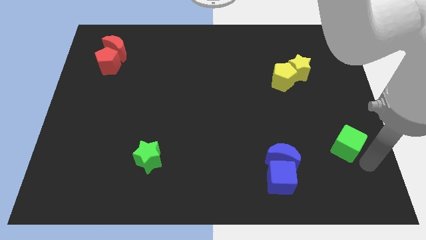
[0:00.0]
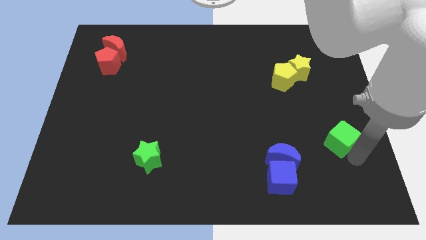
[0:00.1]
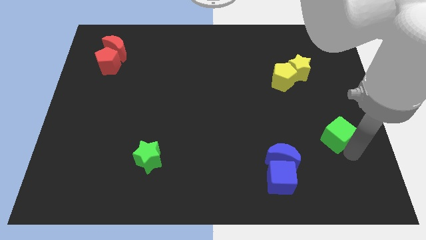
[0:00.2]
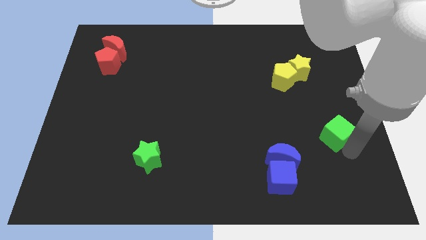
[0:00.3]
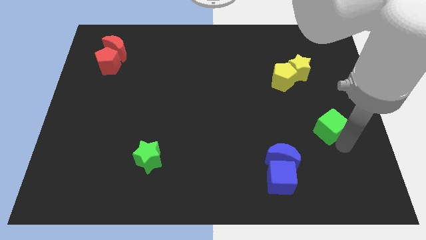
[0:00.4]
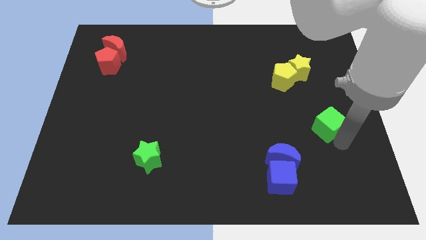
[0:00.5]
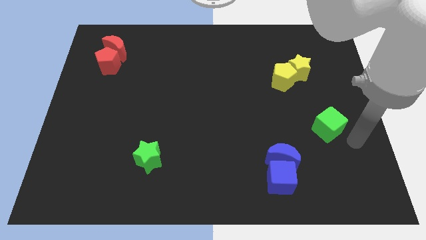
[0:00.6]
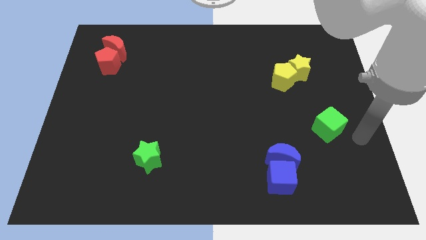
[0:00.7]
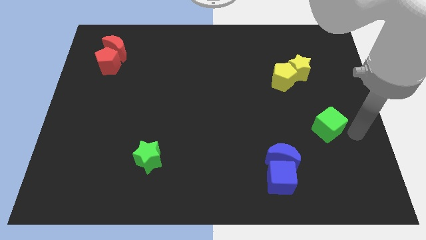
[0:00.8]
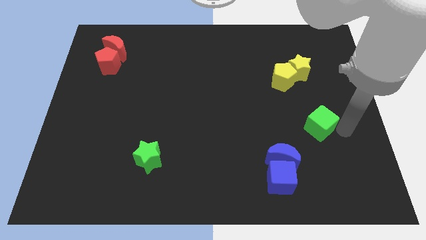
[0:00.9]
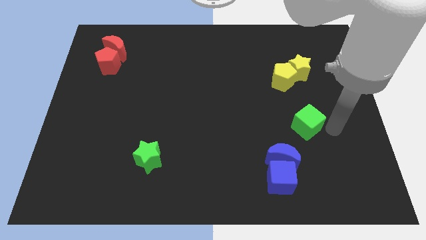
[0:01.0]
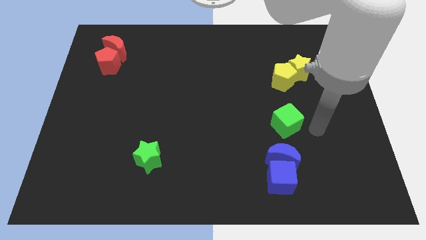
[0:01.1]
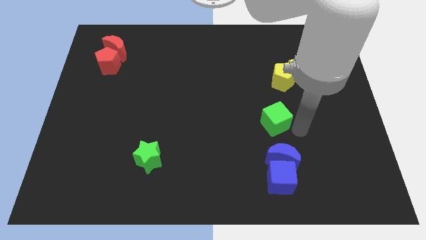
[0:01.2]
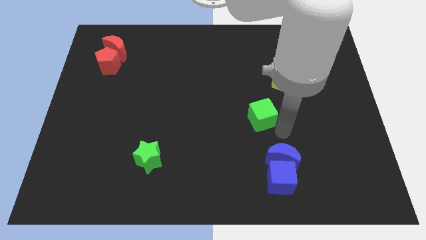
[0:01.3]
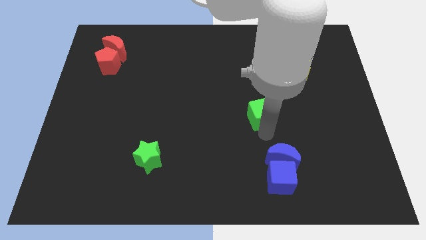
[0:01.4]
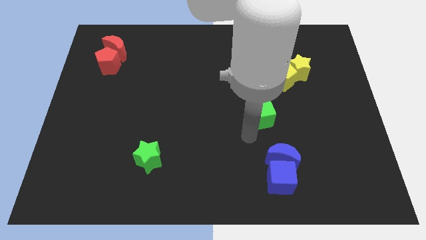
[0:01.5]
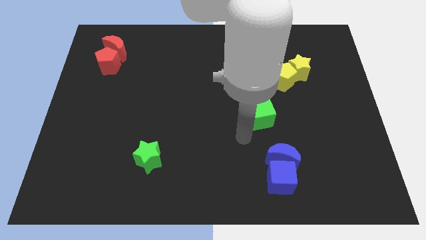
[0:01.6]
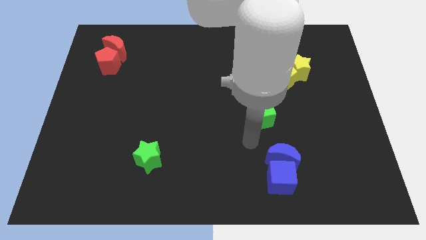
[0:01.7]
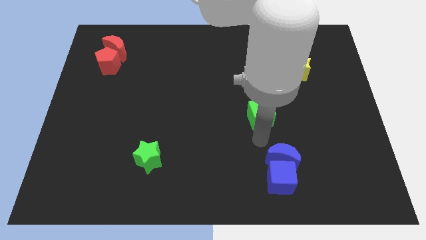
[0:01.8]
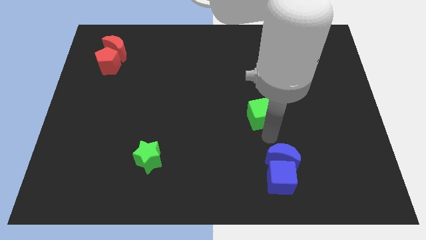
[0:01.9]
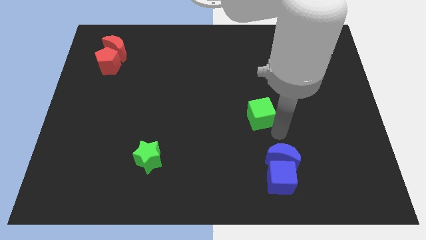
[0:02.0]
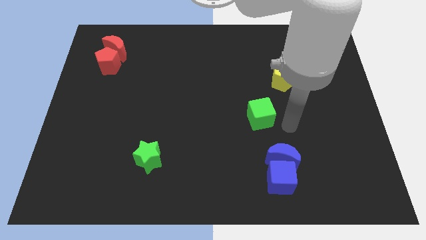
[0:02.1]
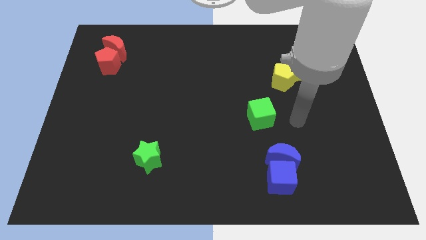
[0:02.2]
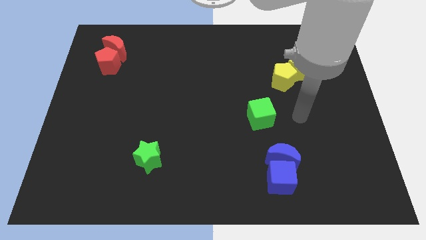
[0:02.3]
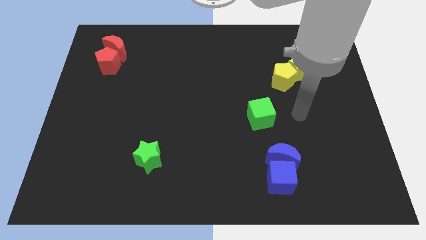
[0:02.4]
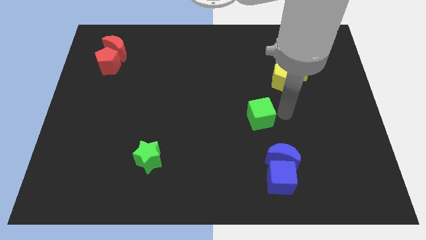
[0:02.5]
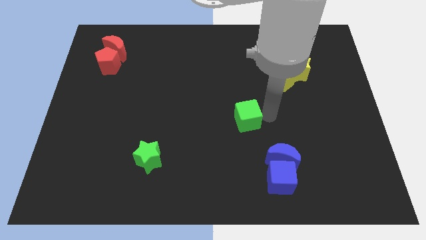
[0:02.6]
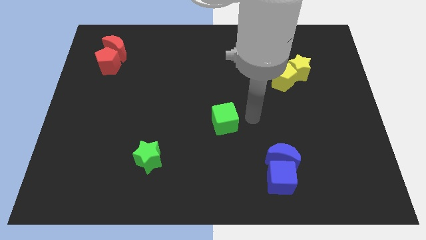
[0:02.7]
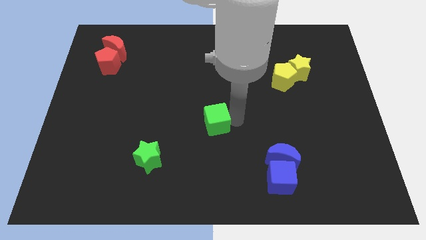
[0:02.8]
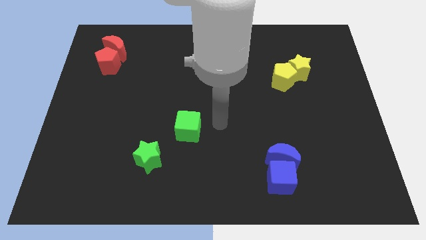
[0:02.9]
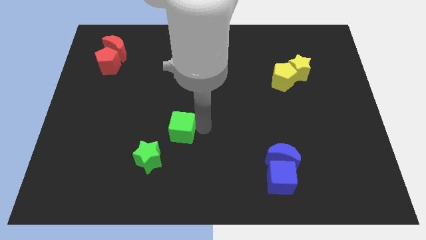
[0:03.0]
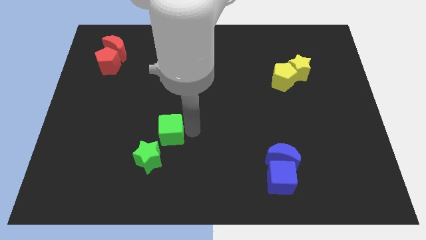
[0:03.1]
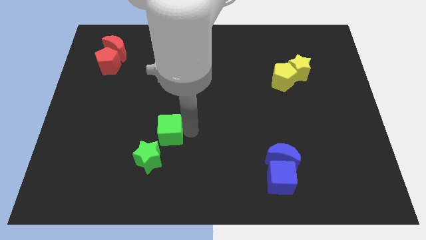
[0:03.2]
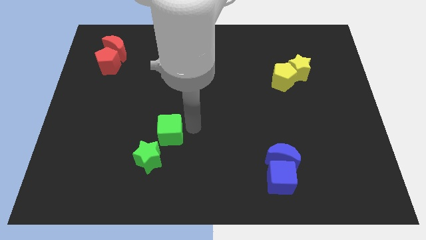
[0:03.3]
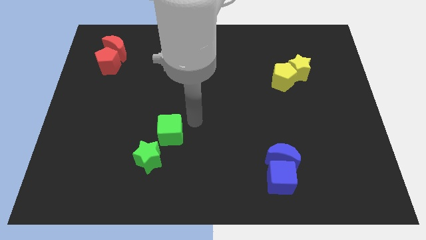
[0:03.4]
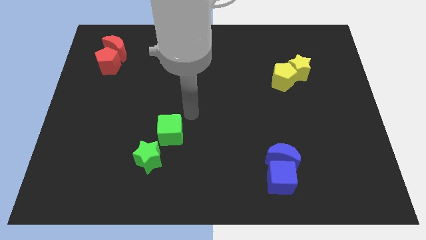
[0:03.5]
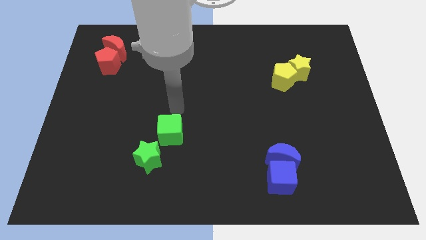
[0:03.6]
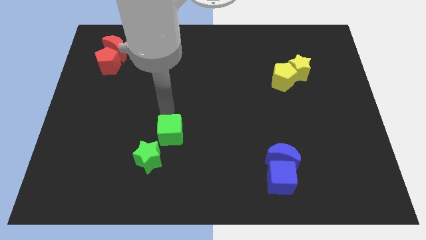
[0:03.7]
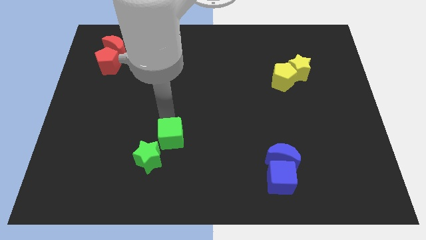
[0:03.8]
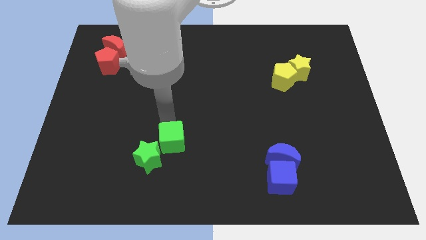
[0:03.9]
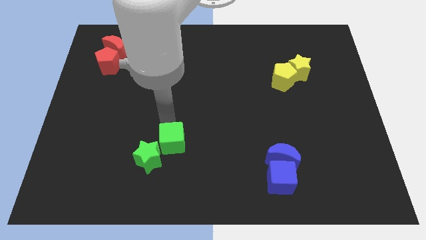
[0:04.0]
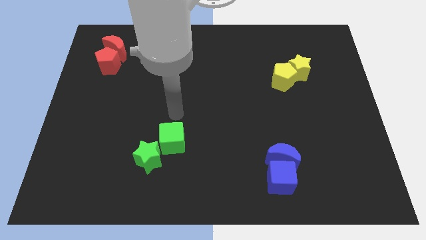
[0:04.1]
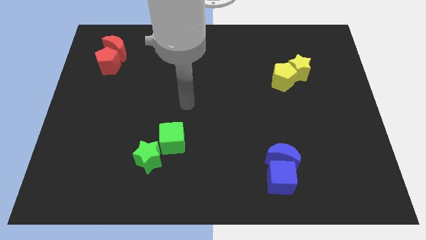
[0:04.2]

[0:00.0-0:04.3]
move green cube to the top right of green star

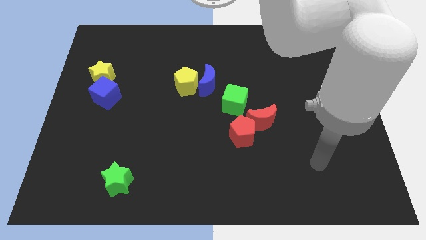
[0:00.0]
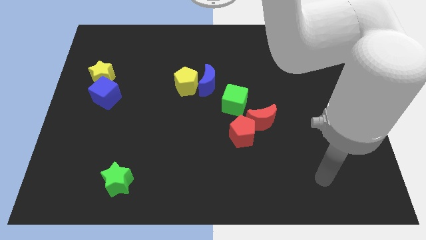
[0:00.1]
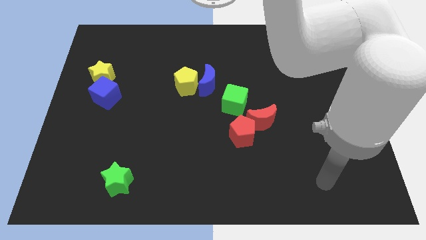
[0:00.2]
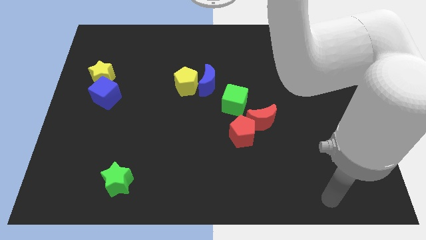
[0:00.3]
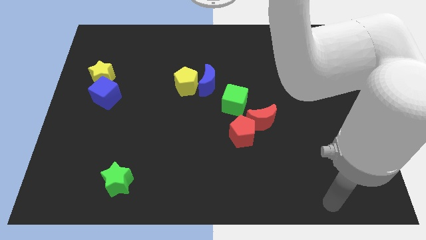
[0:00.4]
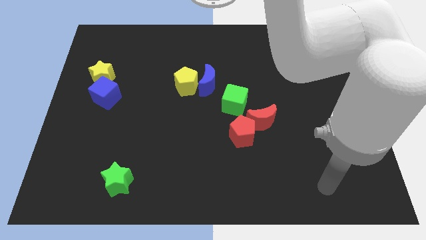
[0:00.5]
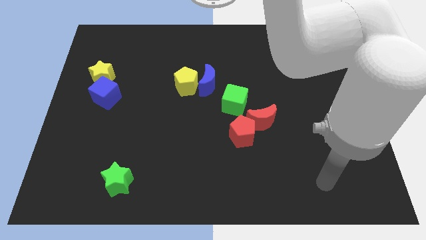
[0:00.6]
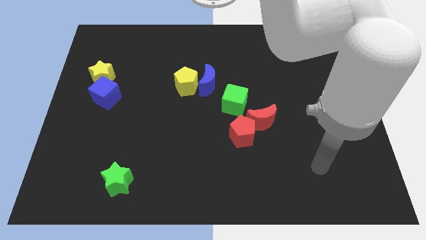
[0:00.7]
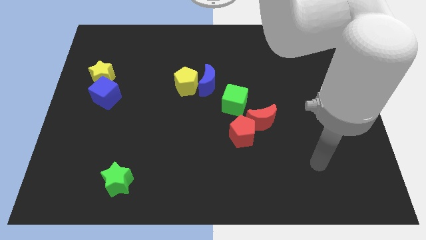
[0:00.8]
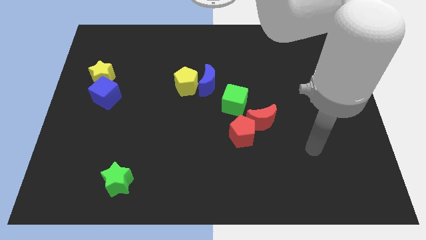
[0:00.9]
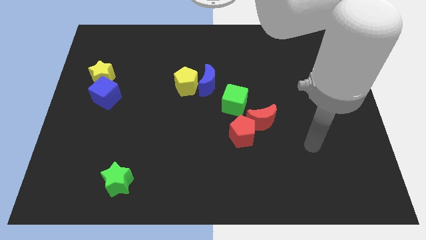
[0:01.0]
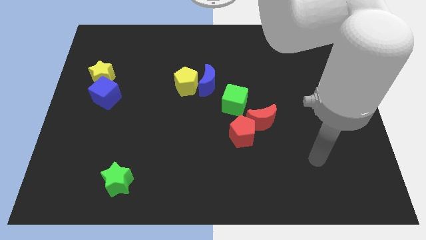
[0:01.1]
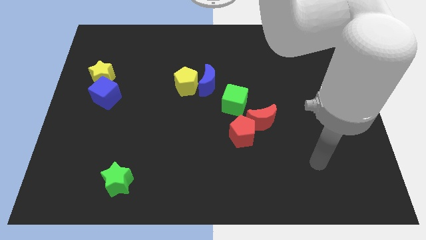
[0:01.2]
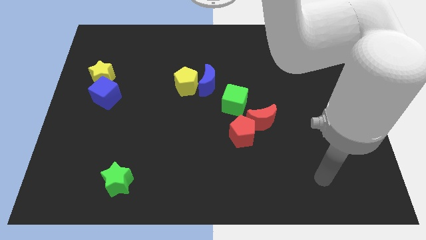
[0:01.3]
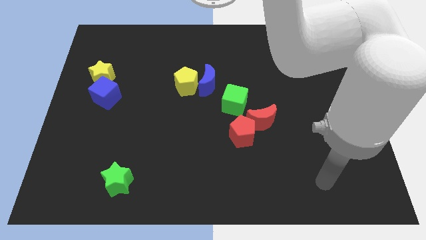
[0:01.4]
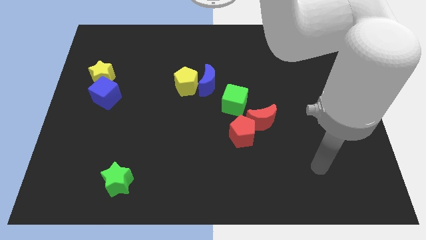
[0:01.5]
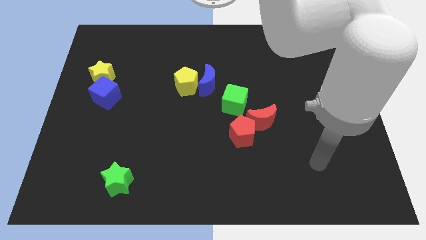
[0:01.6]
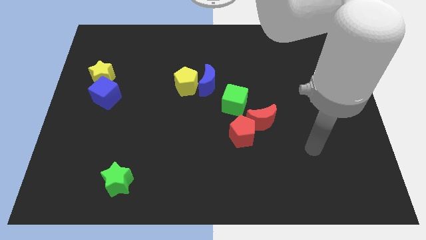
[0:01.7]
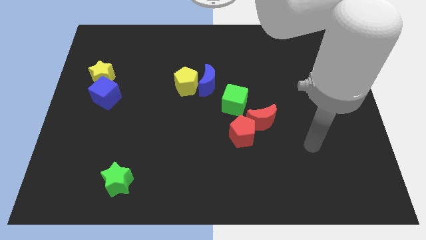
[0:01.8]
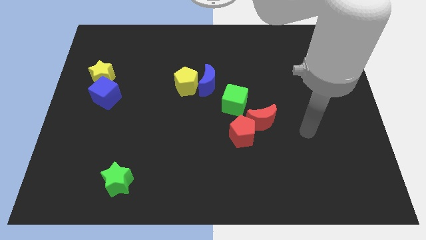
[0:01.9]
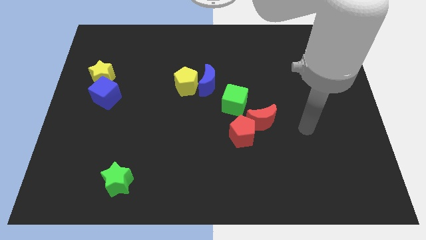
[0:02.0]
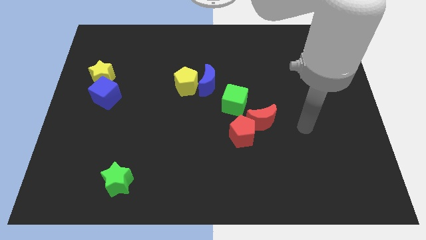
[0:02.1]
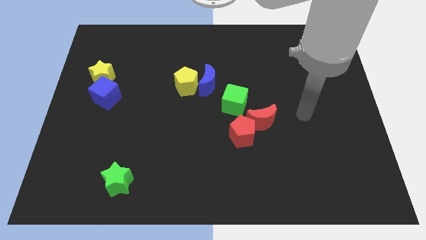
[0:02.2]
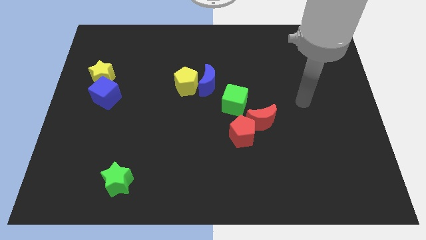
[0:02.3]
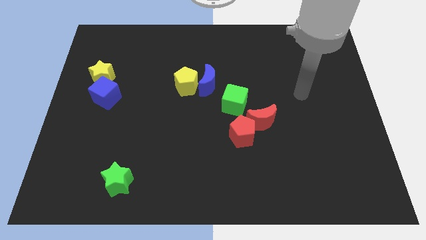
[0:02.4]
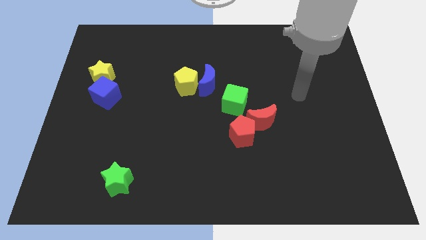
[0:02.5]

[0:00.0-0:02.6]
move your arm slightly upwards

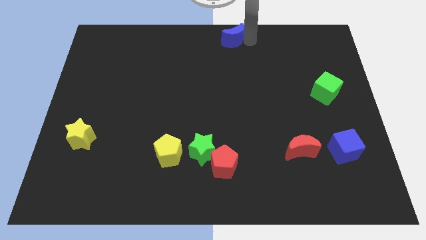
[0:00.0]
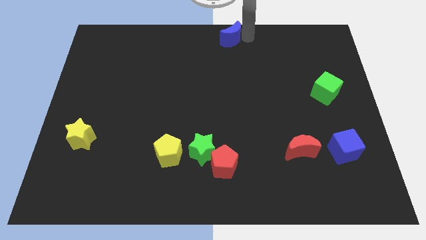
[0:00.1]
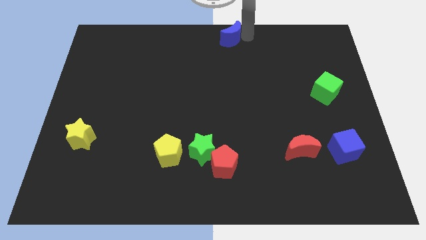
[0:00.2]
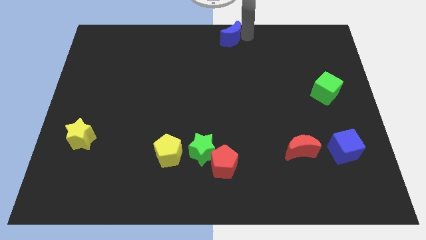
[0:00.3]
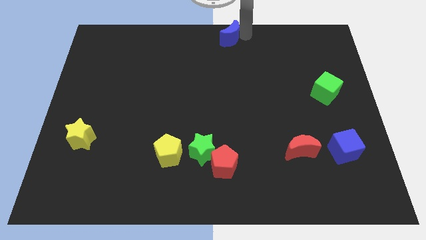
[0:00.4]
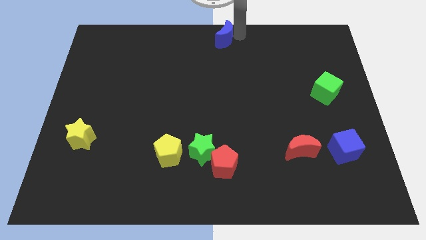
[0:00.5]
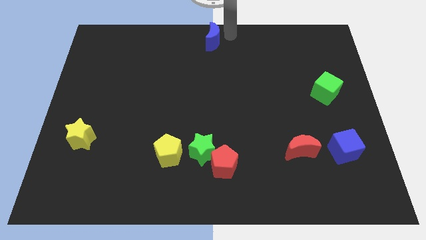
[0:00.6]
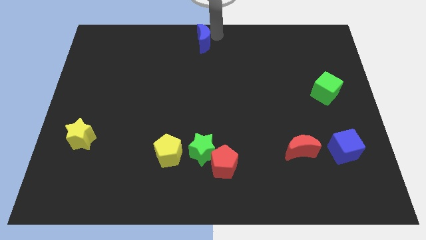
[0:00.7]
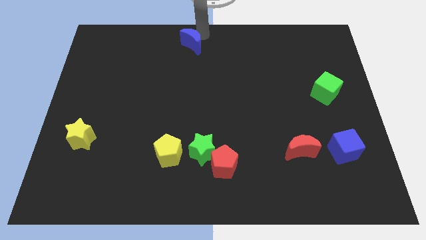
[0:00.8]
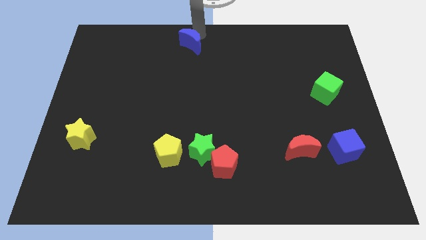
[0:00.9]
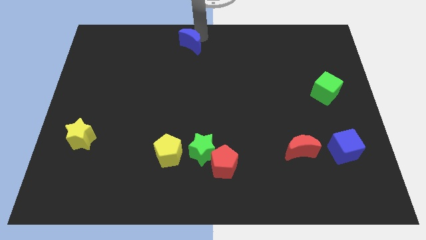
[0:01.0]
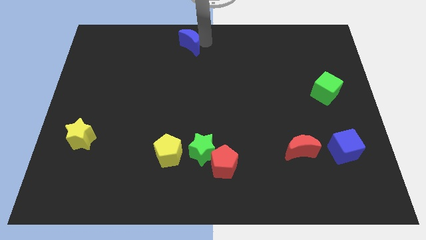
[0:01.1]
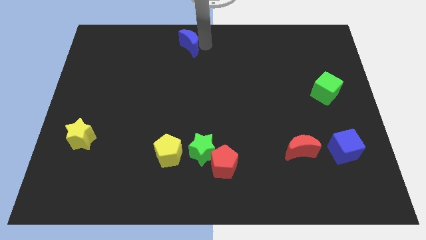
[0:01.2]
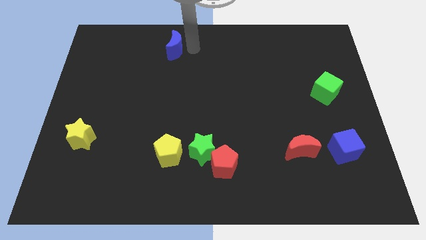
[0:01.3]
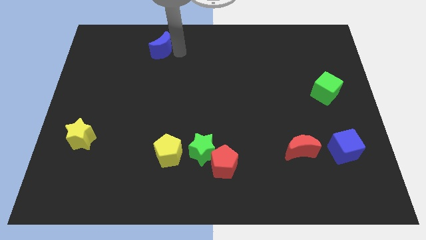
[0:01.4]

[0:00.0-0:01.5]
push the blue moon slightly on the left side

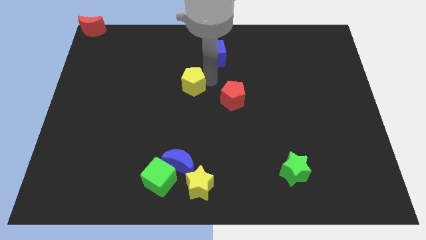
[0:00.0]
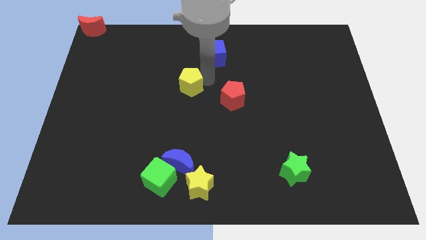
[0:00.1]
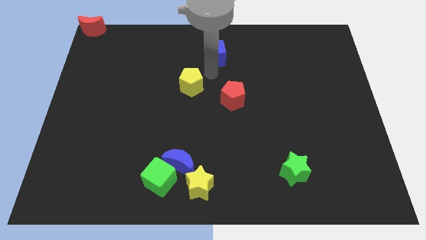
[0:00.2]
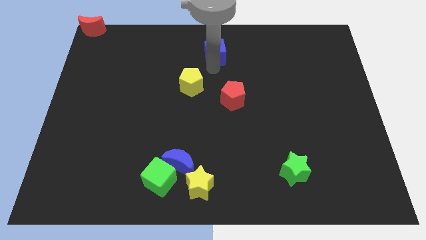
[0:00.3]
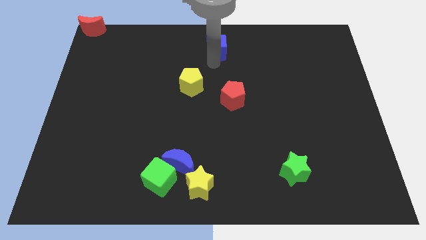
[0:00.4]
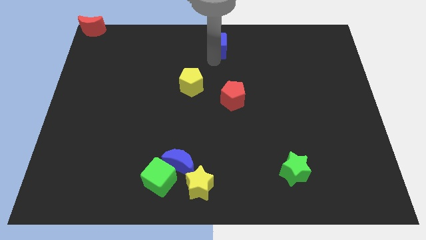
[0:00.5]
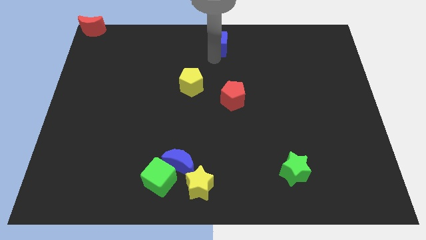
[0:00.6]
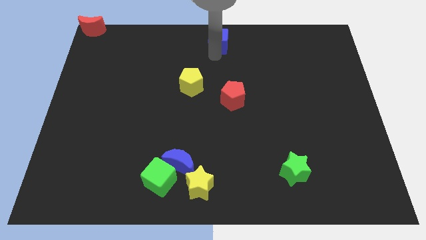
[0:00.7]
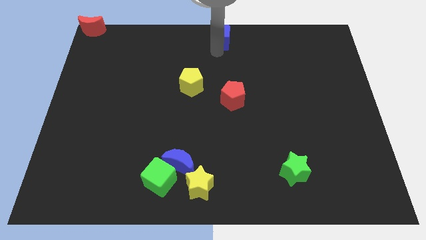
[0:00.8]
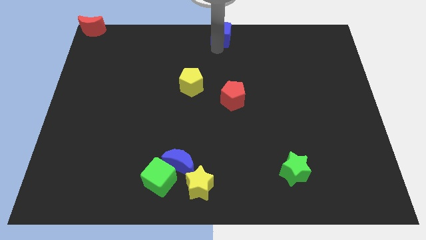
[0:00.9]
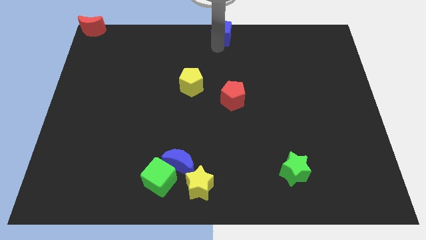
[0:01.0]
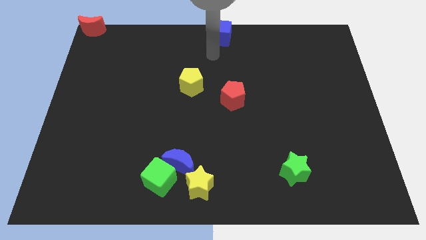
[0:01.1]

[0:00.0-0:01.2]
place the blue cube at the top center of the board
